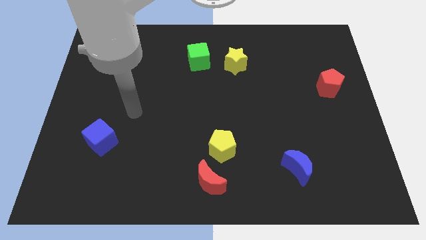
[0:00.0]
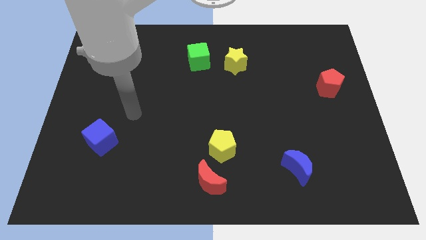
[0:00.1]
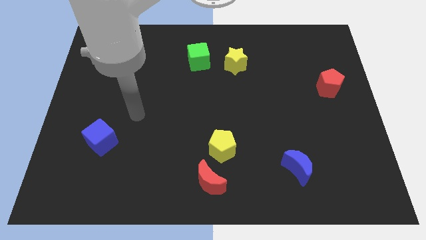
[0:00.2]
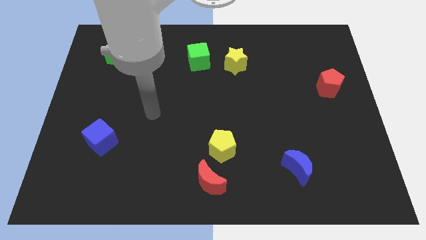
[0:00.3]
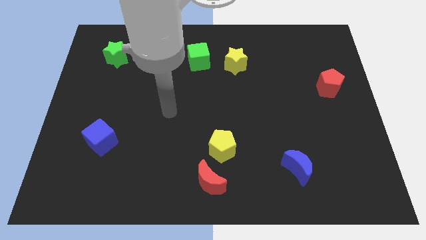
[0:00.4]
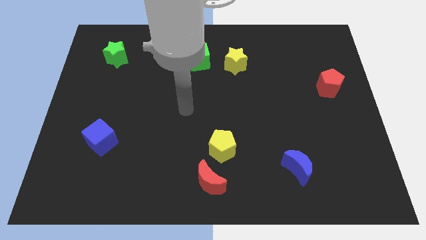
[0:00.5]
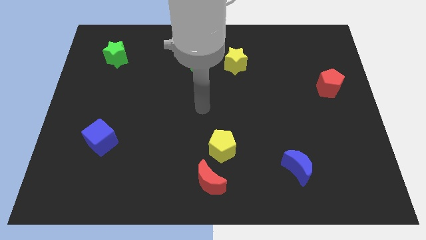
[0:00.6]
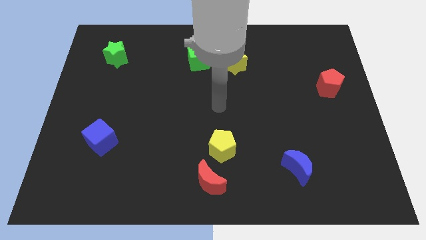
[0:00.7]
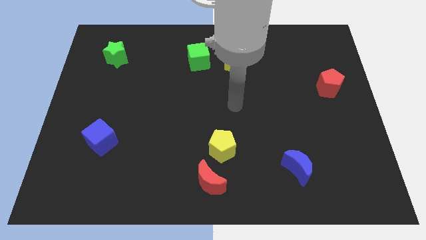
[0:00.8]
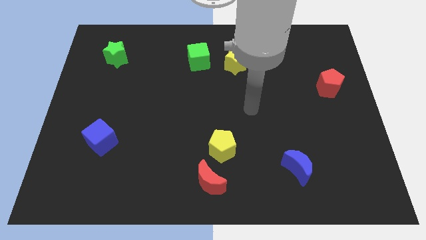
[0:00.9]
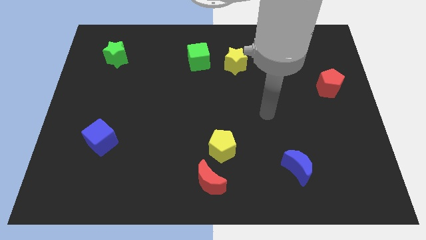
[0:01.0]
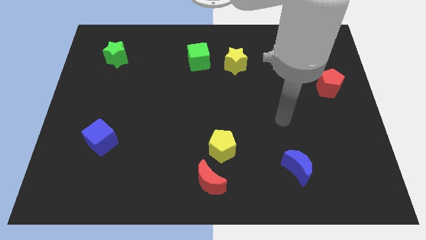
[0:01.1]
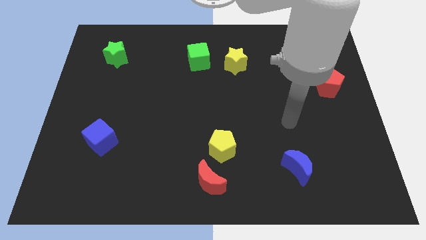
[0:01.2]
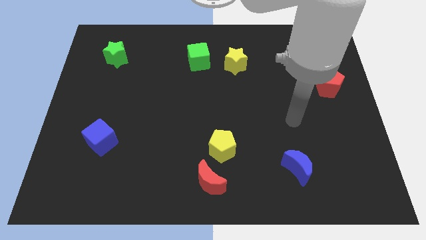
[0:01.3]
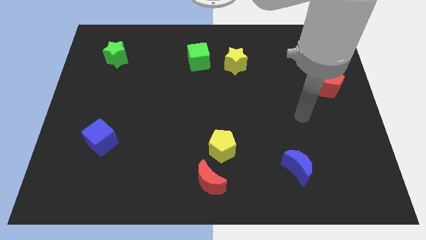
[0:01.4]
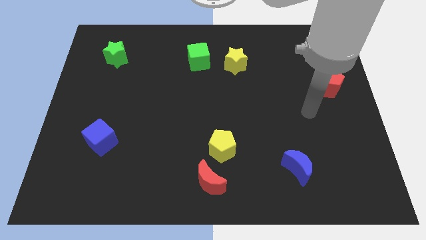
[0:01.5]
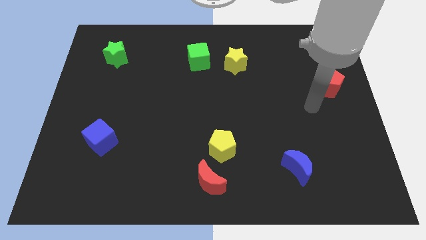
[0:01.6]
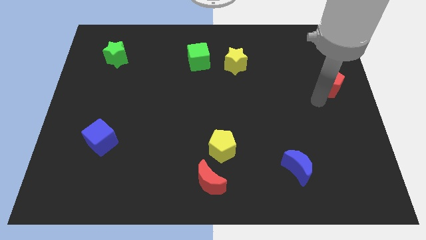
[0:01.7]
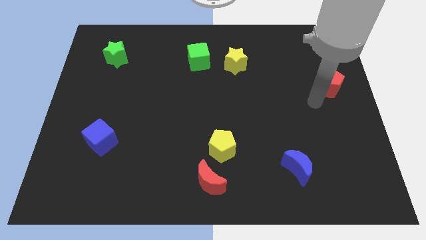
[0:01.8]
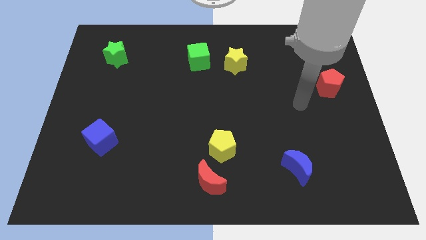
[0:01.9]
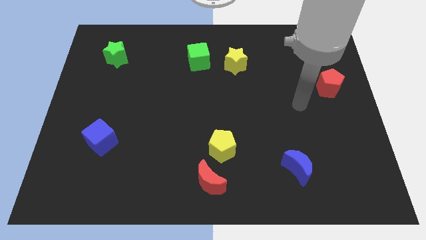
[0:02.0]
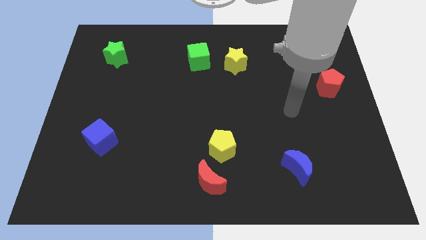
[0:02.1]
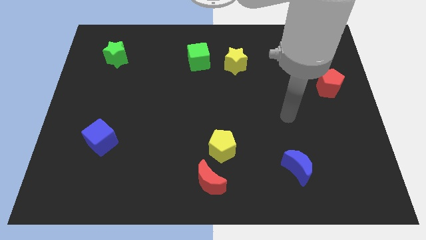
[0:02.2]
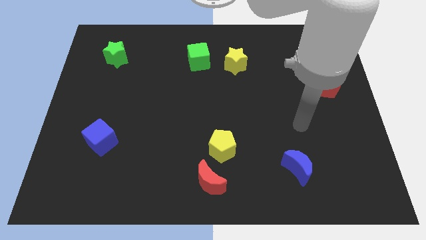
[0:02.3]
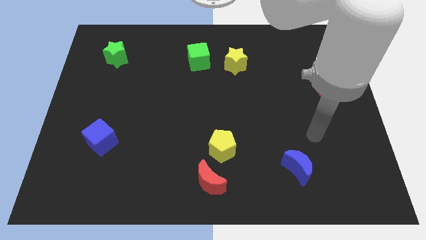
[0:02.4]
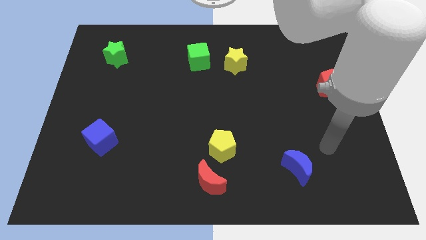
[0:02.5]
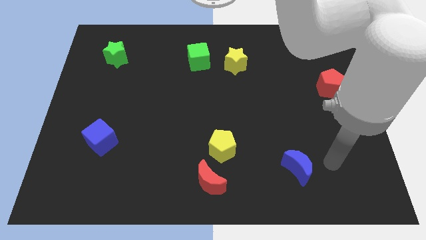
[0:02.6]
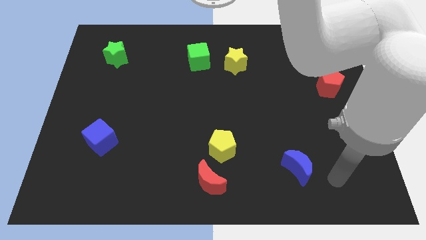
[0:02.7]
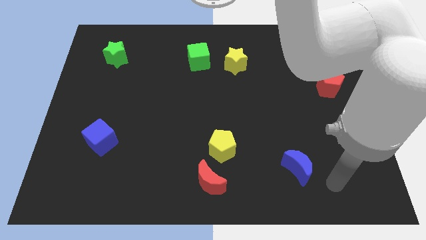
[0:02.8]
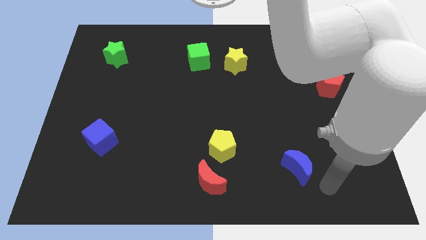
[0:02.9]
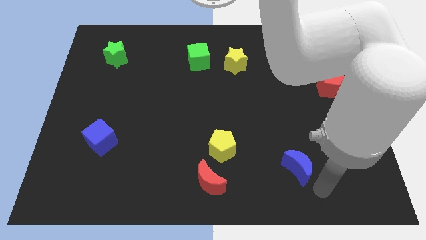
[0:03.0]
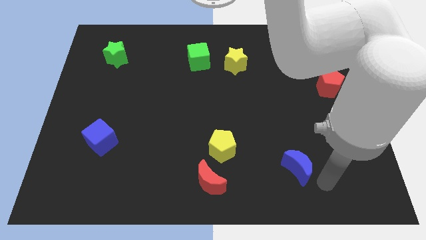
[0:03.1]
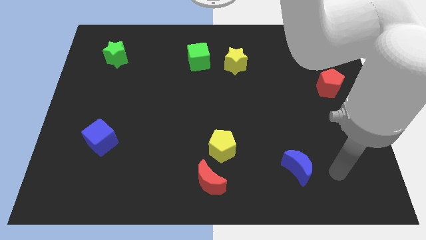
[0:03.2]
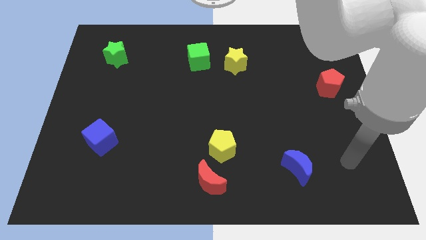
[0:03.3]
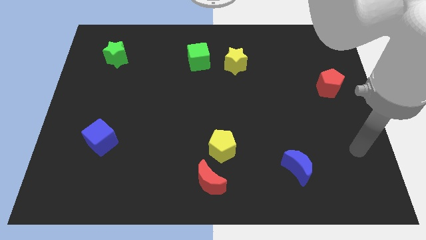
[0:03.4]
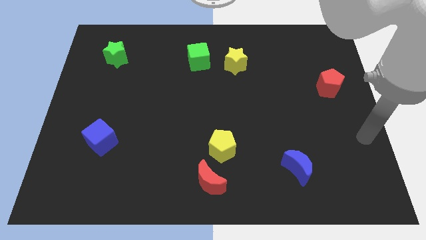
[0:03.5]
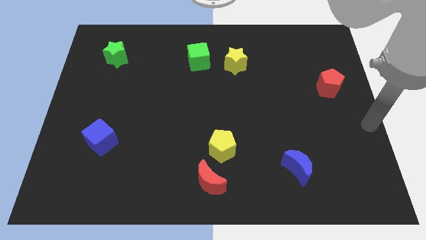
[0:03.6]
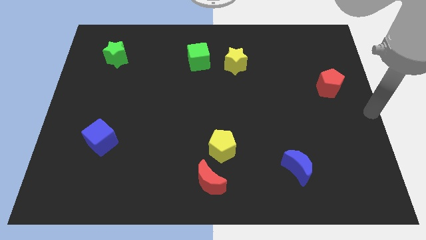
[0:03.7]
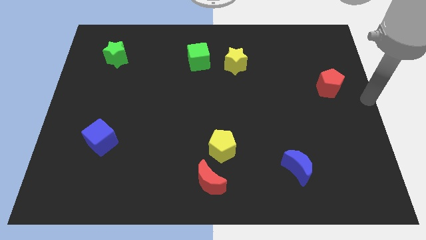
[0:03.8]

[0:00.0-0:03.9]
place your hand at the center right

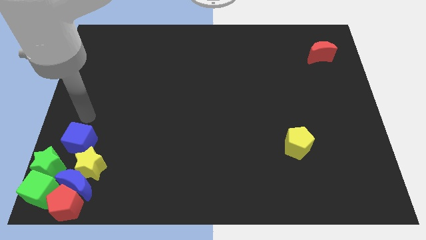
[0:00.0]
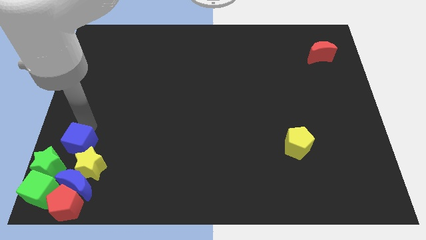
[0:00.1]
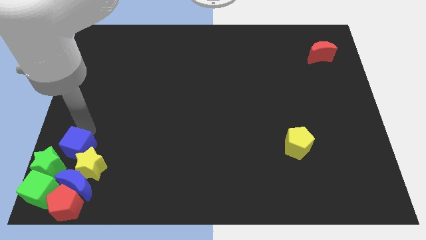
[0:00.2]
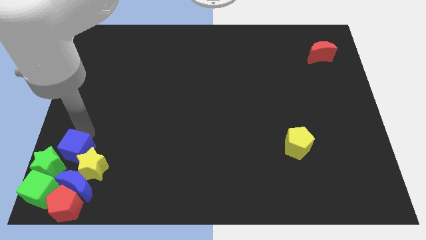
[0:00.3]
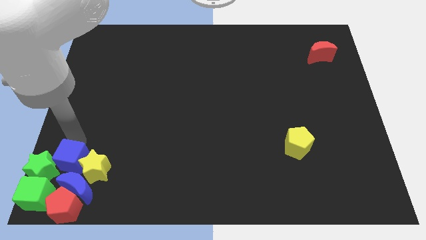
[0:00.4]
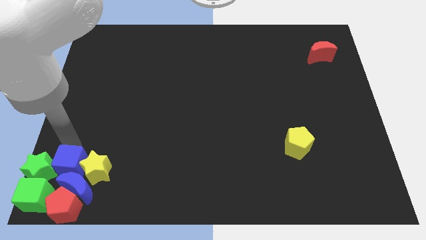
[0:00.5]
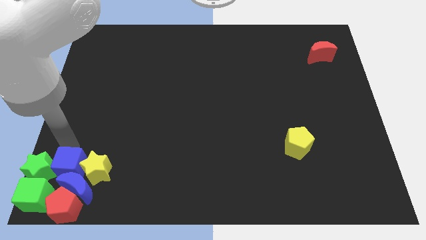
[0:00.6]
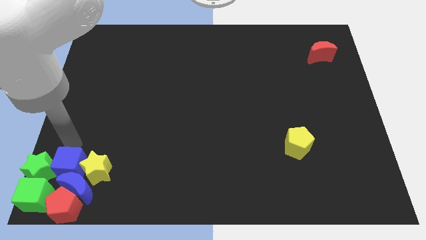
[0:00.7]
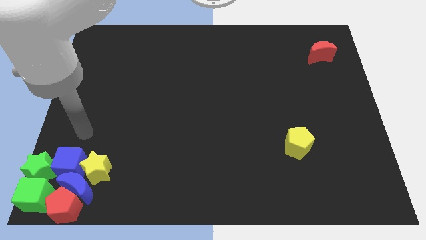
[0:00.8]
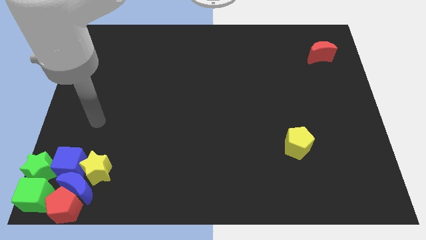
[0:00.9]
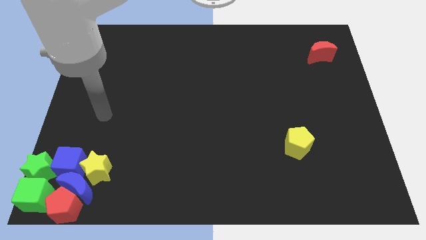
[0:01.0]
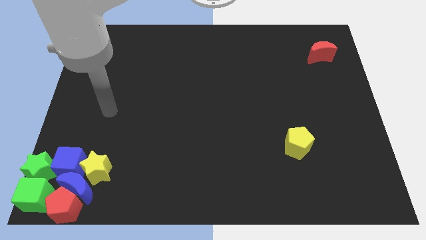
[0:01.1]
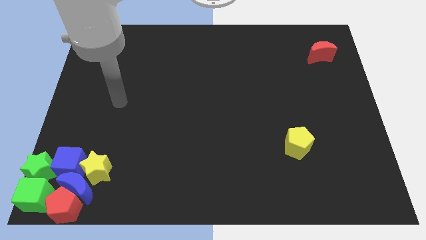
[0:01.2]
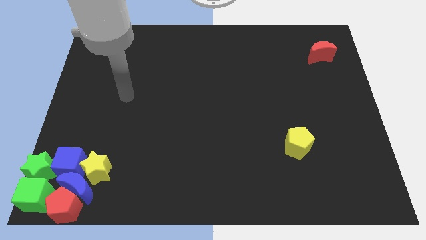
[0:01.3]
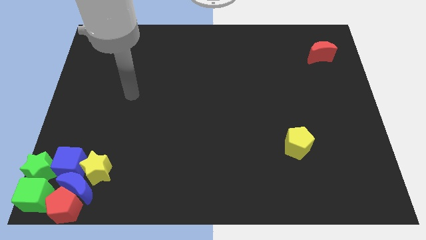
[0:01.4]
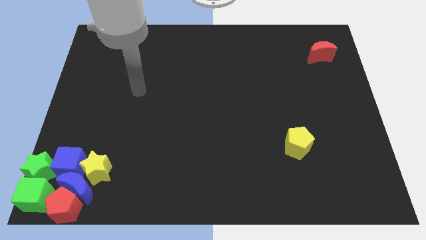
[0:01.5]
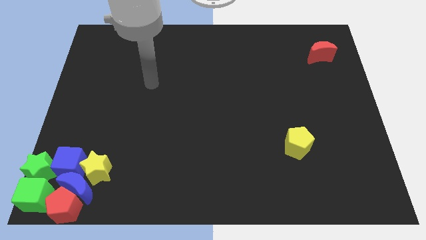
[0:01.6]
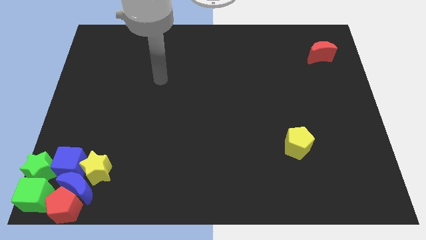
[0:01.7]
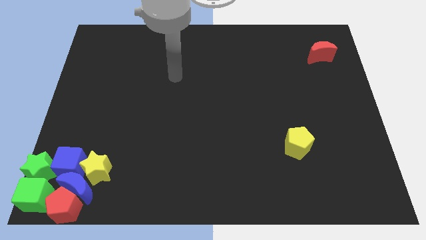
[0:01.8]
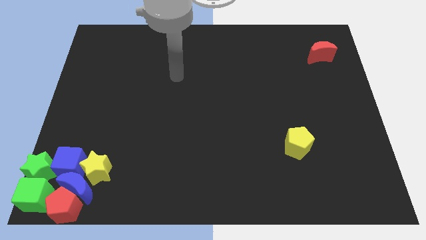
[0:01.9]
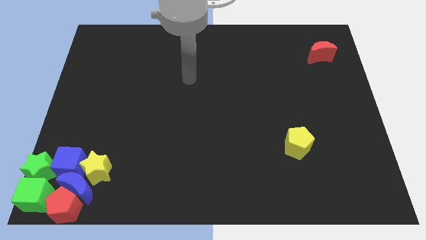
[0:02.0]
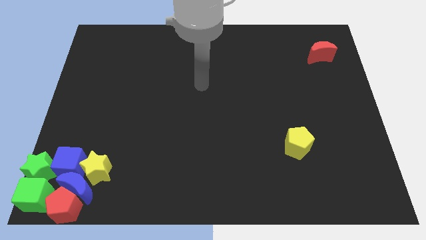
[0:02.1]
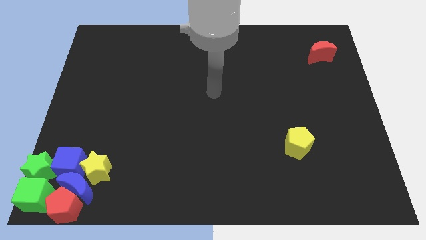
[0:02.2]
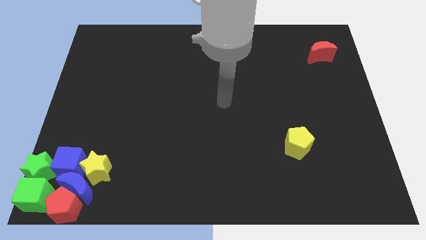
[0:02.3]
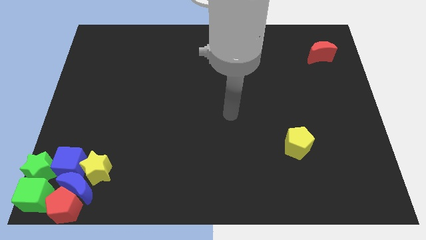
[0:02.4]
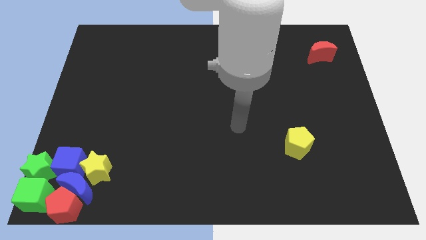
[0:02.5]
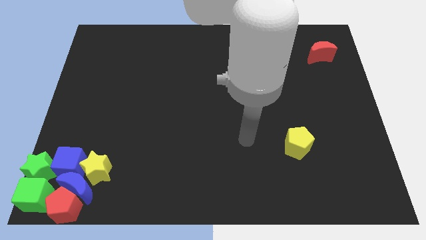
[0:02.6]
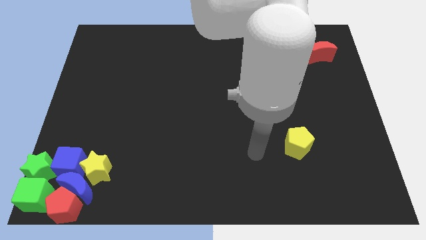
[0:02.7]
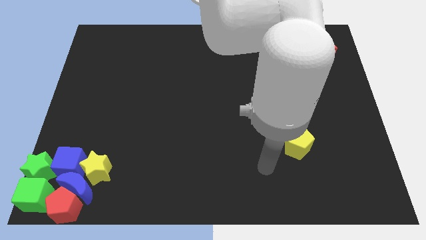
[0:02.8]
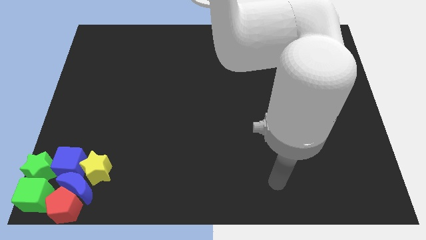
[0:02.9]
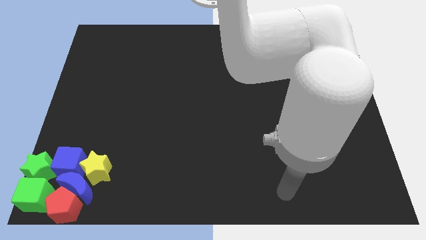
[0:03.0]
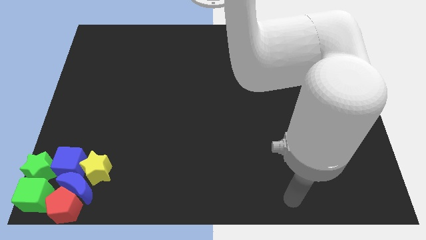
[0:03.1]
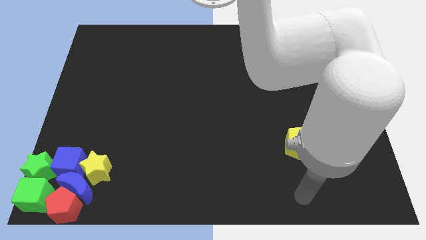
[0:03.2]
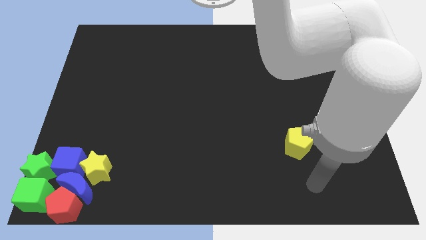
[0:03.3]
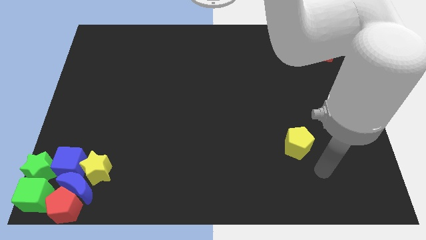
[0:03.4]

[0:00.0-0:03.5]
push the blue cube into the group of blocks

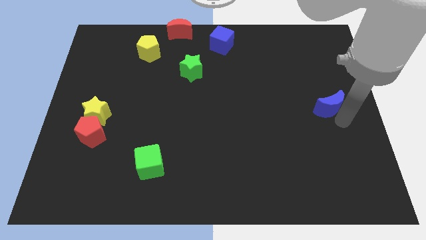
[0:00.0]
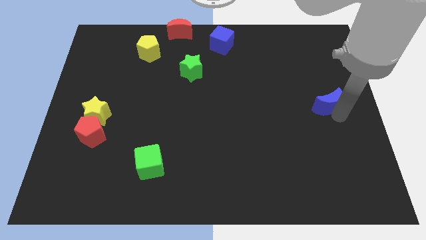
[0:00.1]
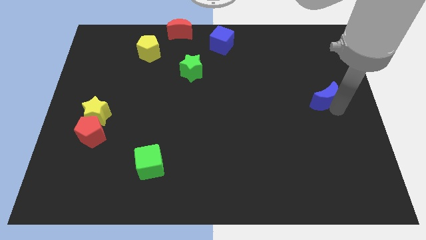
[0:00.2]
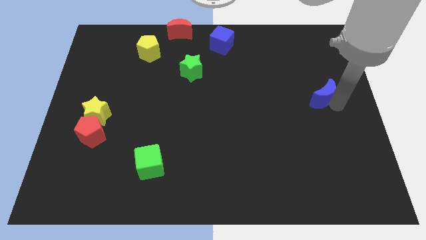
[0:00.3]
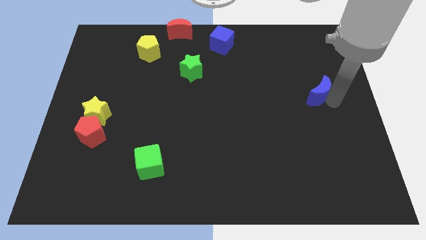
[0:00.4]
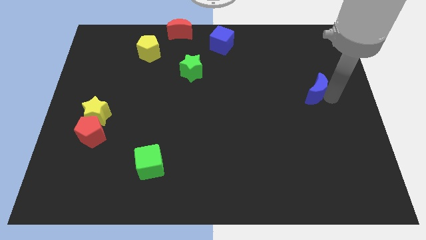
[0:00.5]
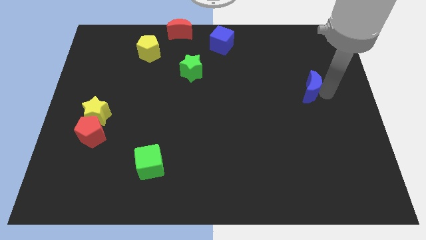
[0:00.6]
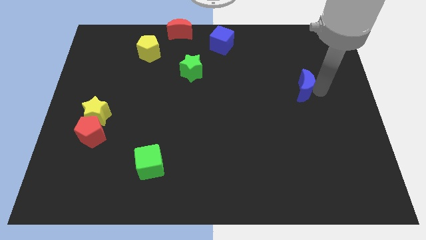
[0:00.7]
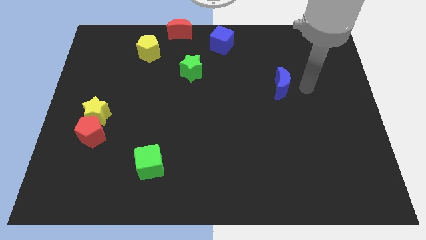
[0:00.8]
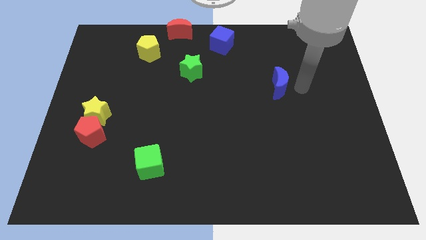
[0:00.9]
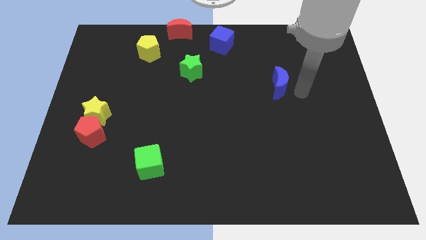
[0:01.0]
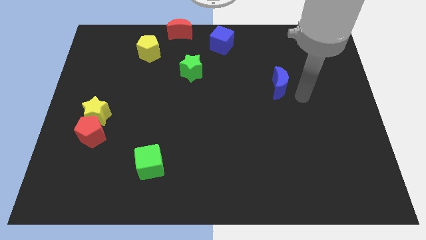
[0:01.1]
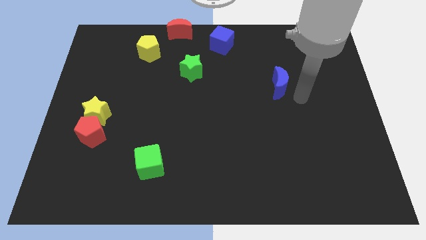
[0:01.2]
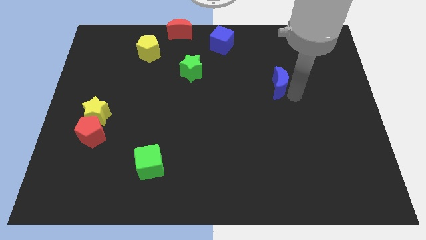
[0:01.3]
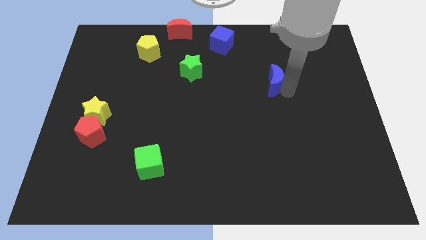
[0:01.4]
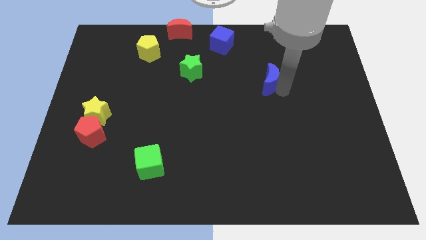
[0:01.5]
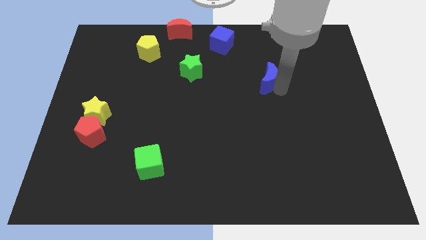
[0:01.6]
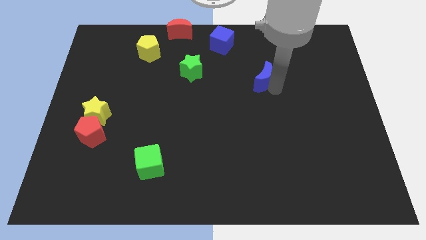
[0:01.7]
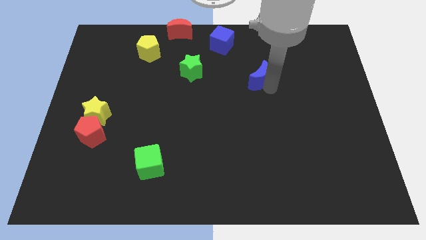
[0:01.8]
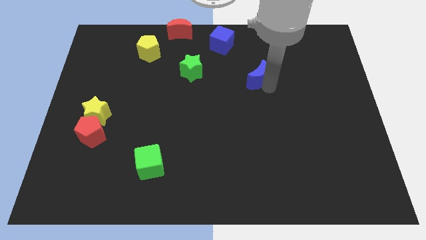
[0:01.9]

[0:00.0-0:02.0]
drag the blue moon slightly upwards
